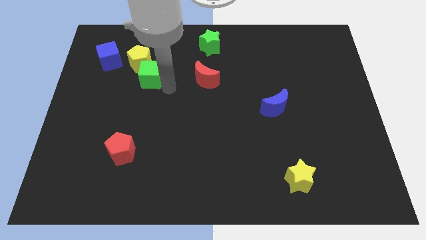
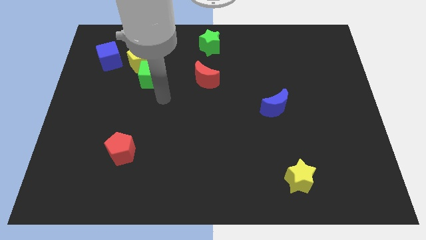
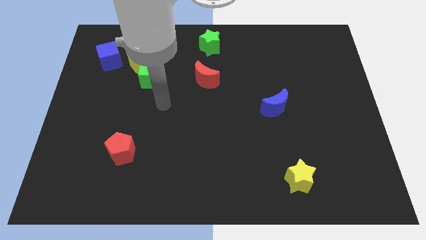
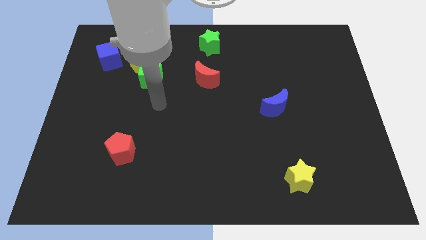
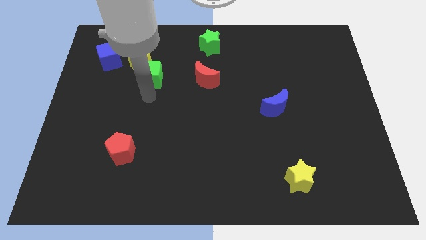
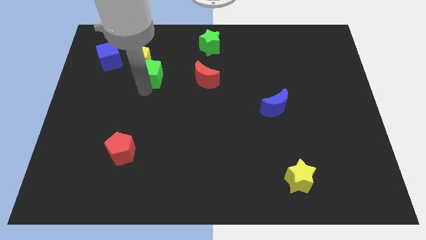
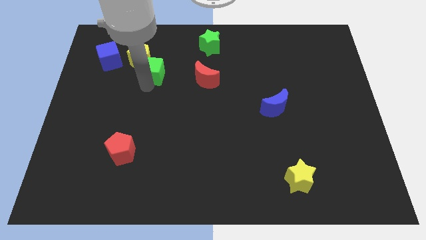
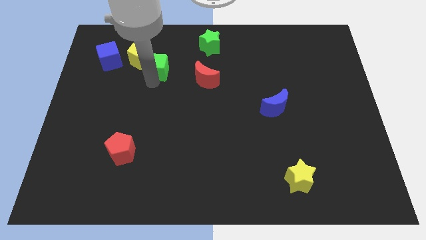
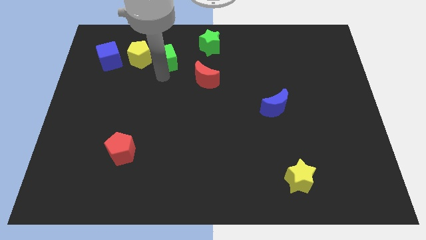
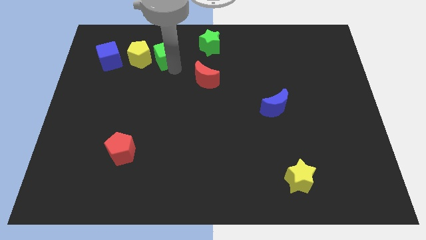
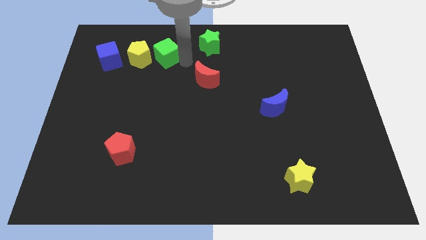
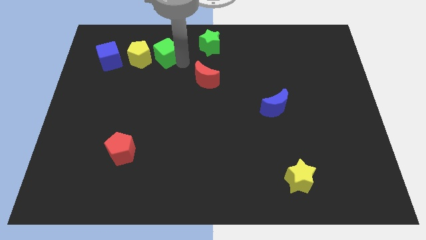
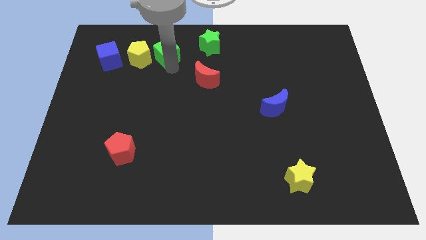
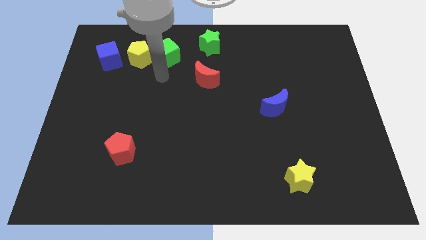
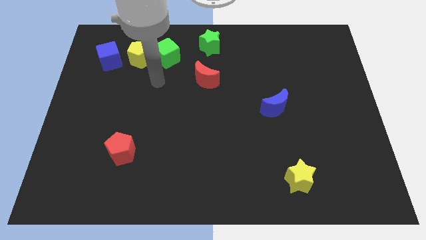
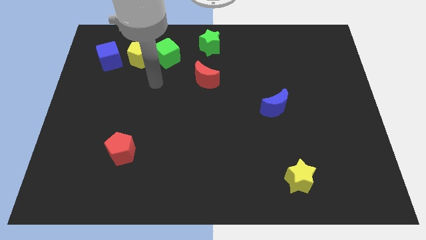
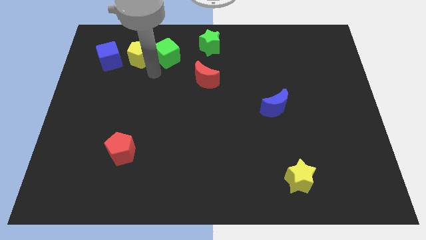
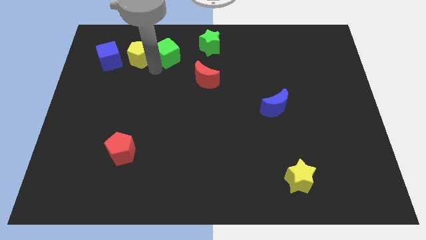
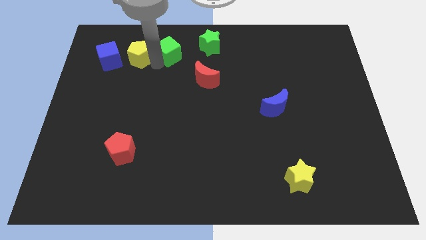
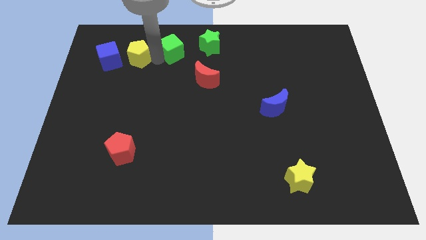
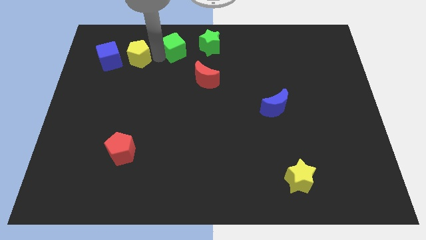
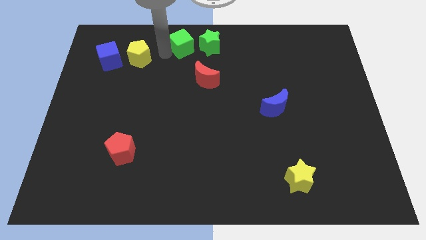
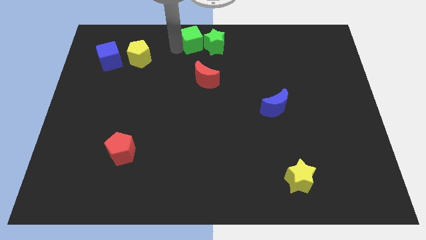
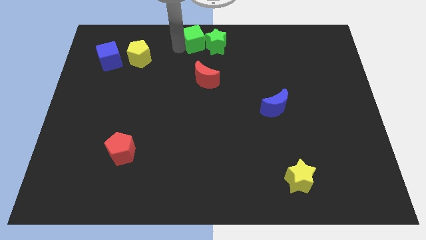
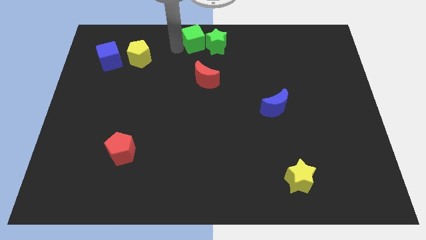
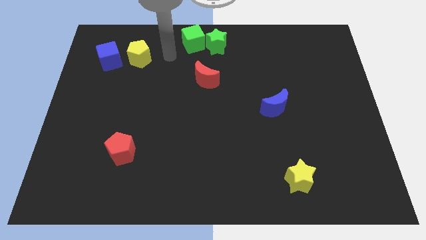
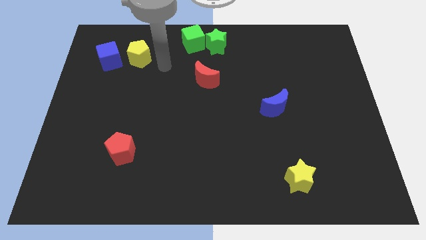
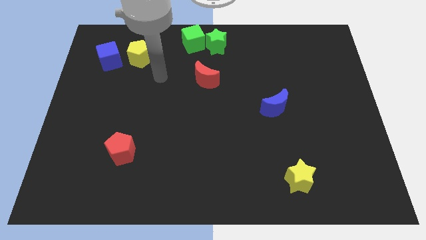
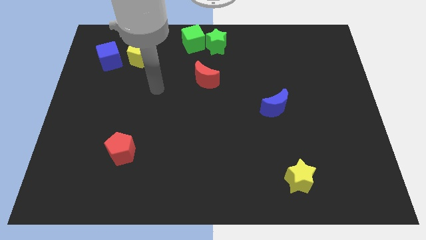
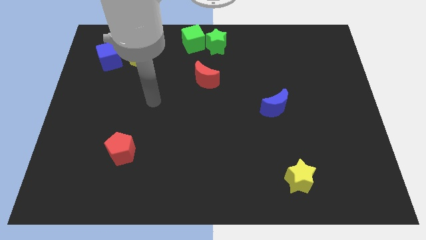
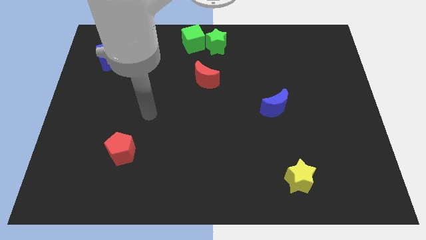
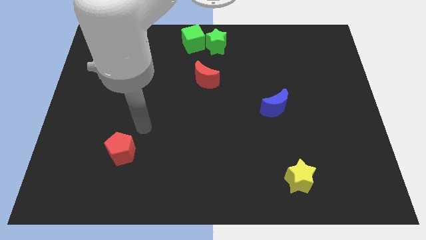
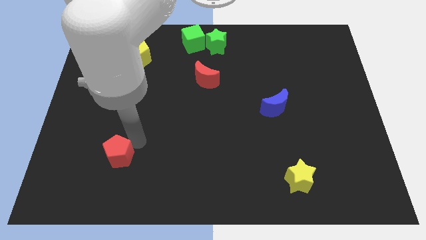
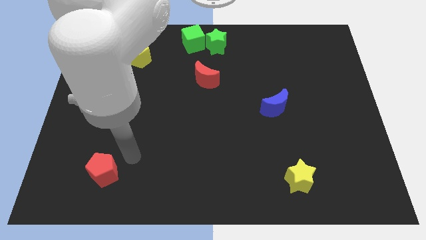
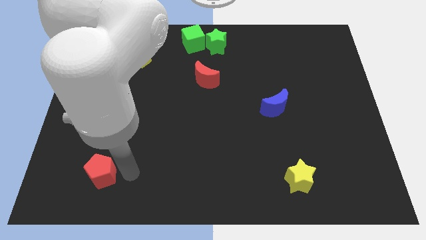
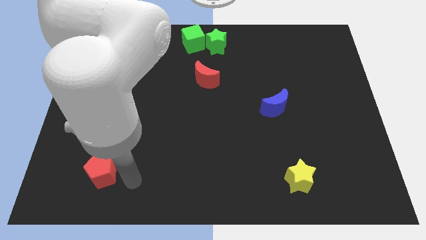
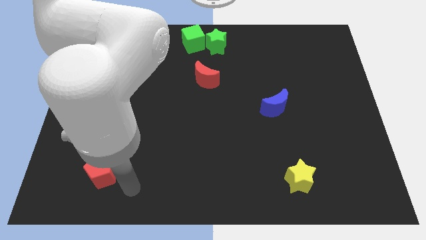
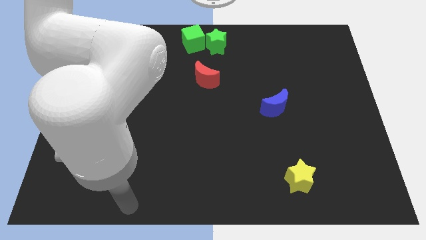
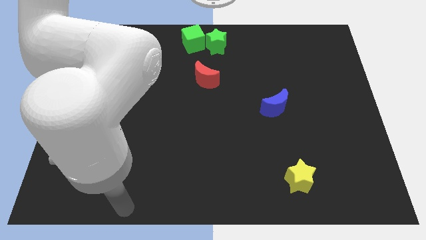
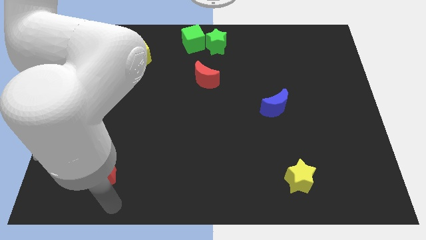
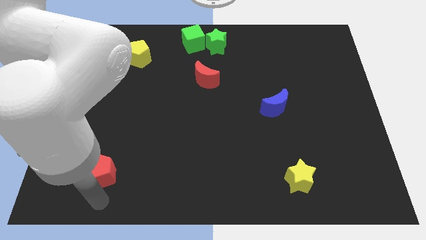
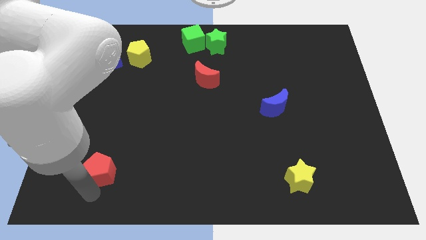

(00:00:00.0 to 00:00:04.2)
place the green cube left to the green star

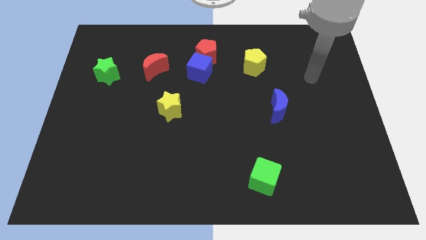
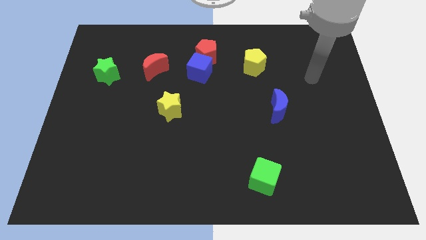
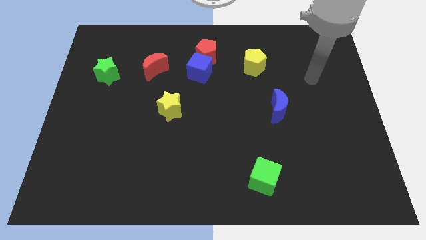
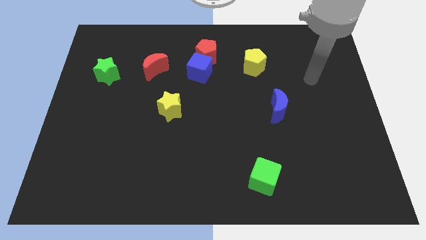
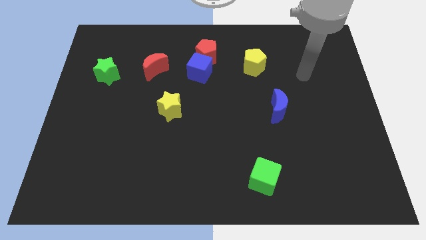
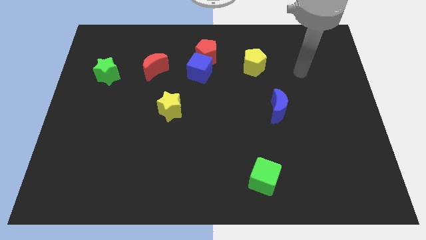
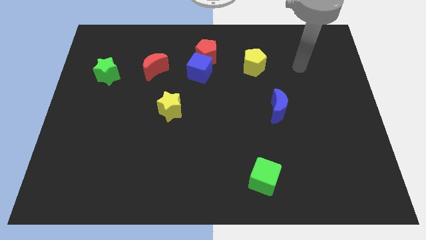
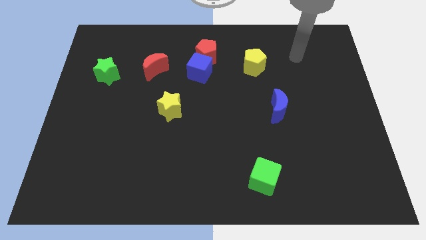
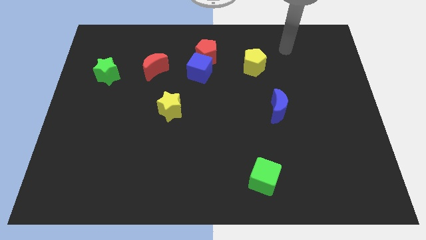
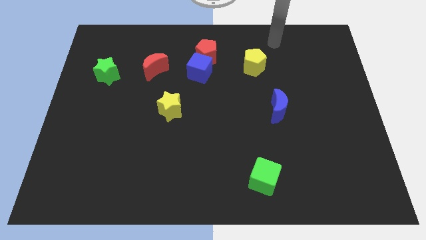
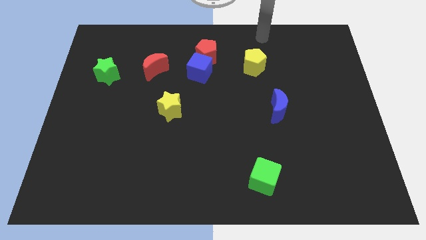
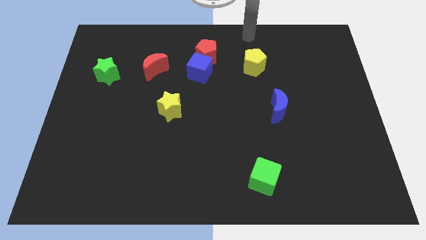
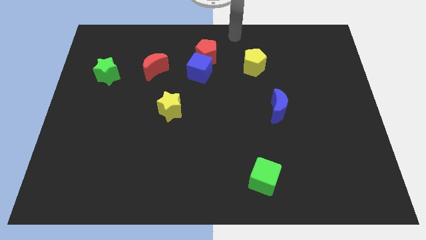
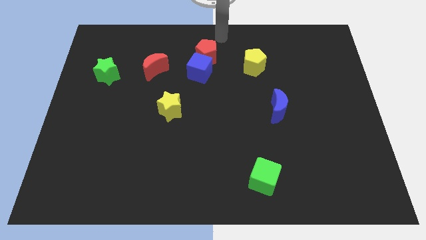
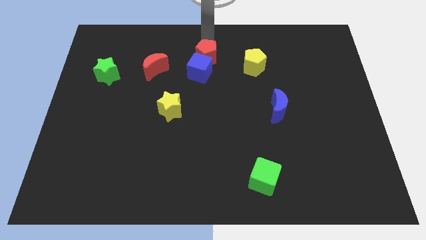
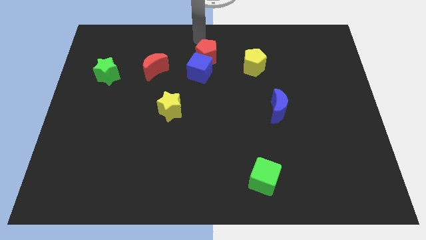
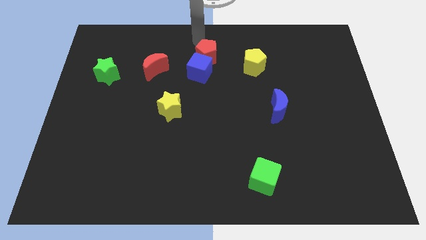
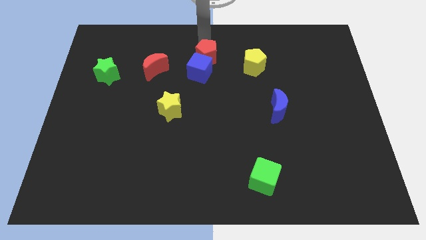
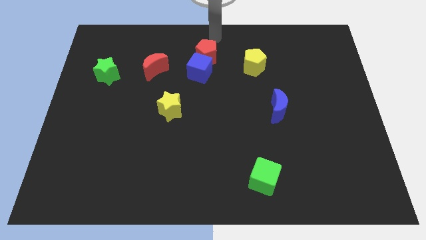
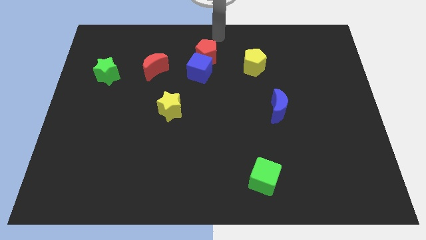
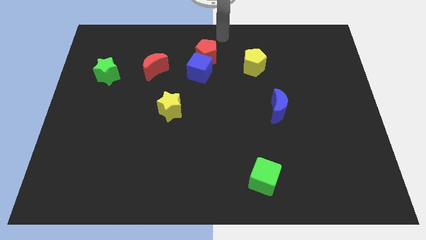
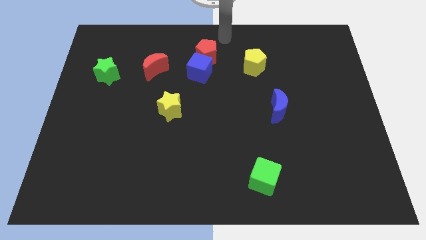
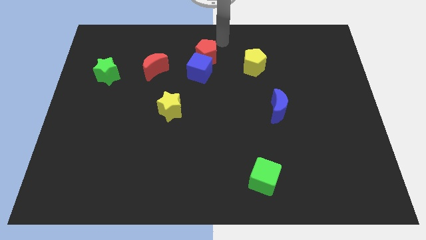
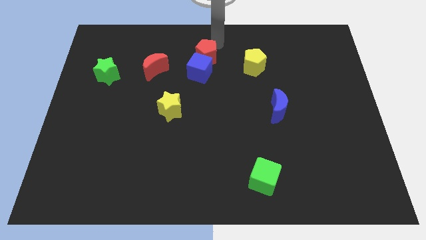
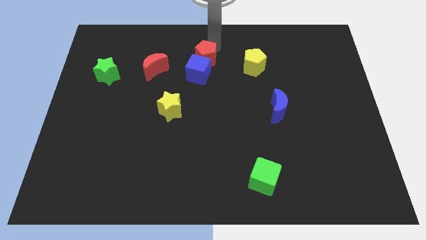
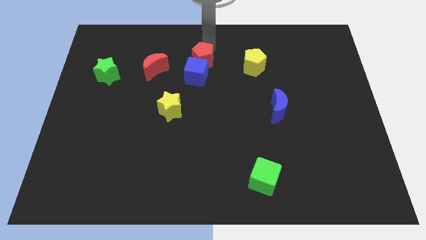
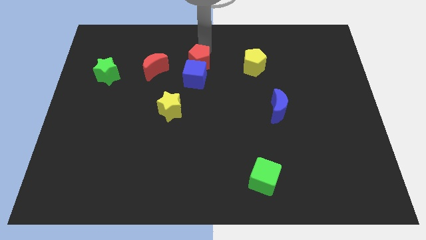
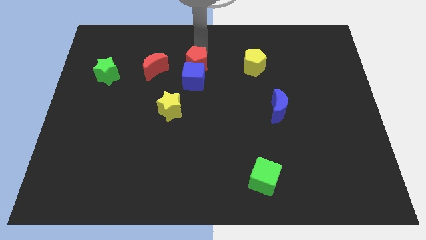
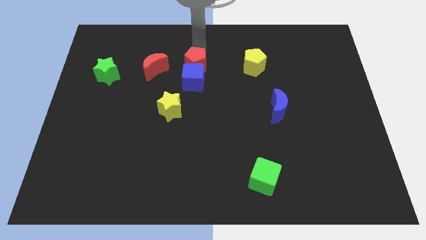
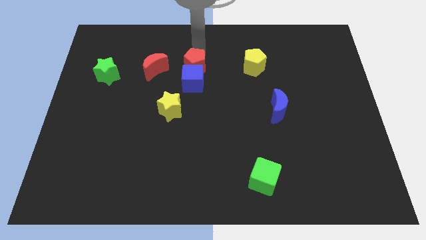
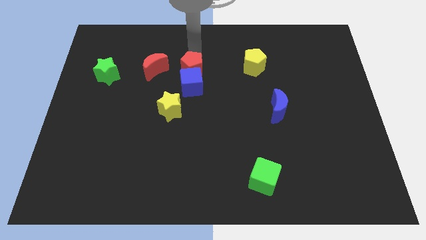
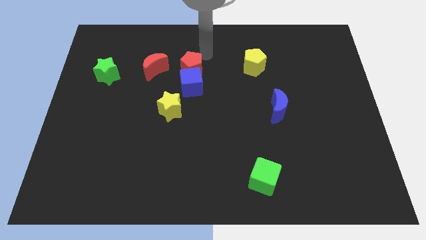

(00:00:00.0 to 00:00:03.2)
place the red pentagon right to the red moon

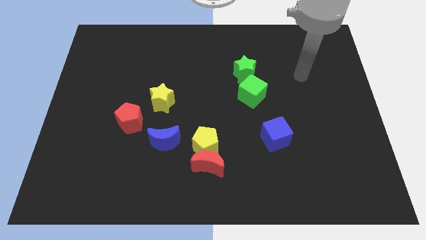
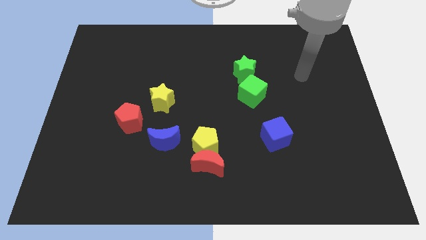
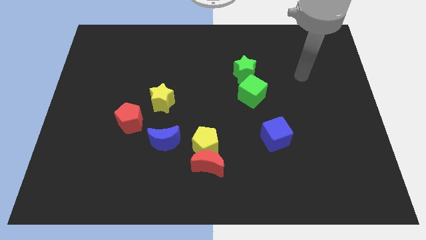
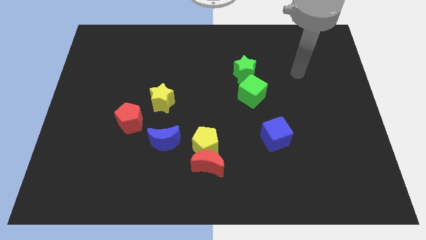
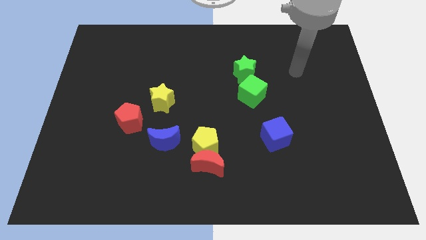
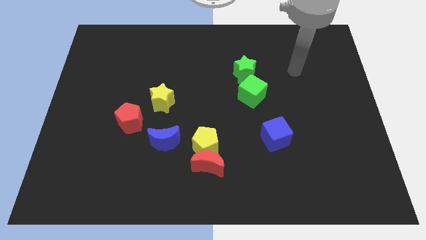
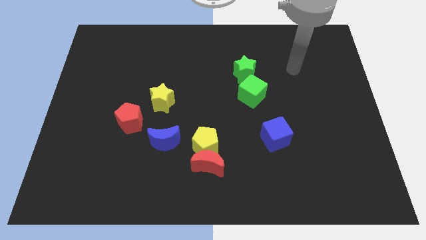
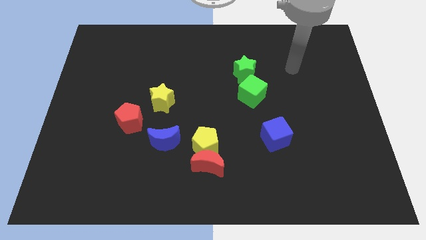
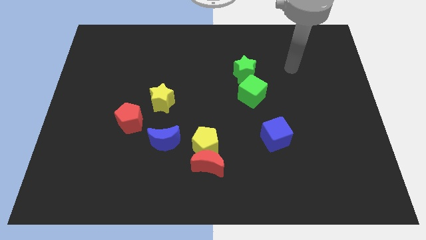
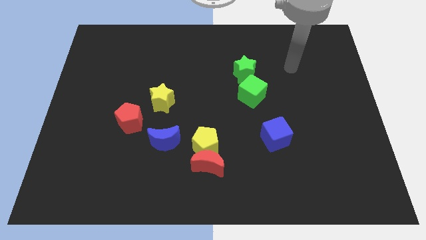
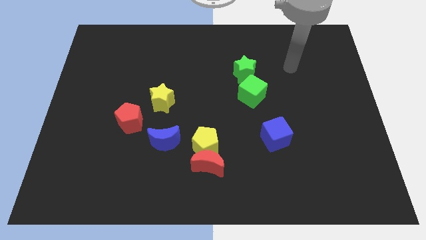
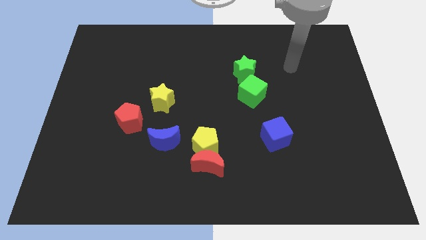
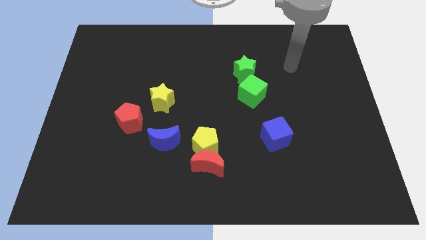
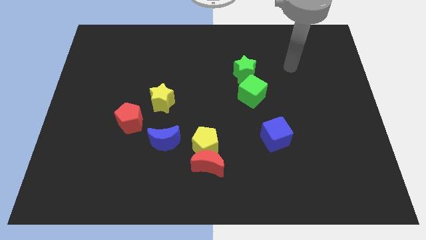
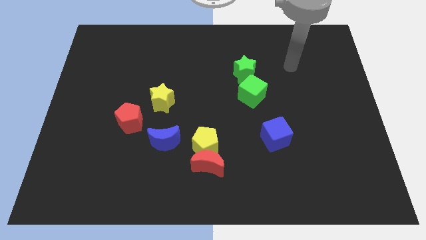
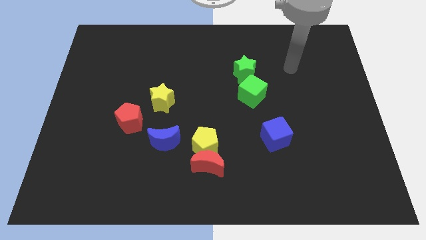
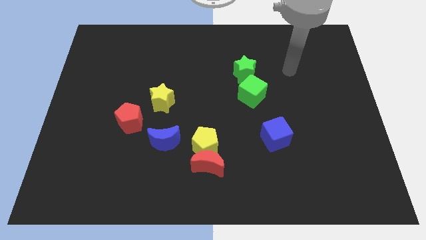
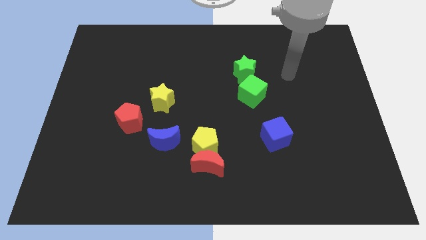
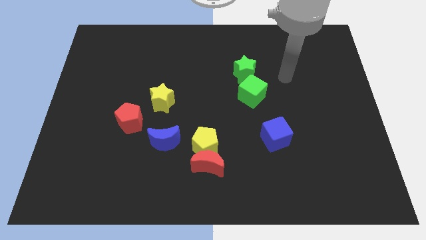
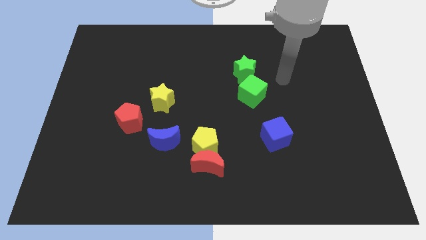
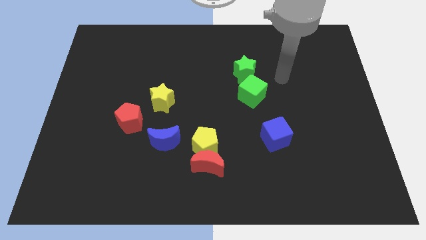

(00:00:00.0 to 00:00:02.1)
move your arm slightly to the left
